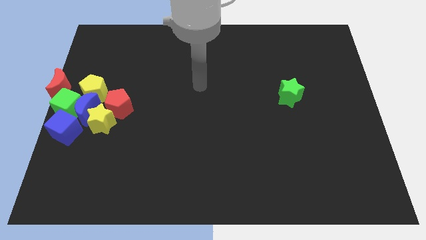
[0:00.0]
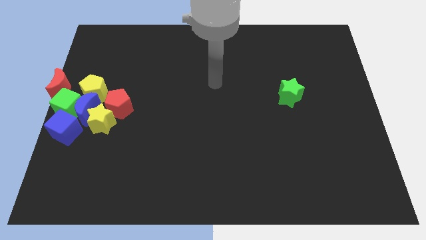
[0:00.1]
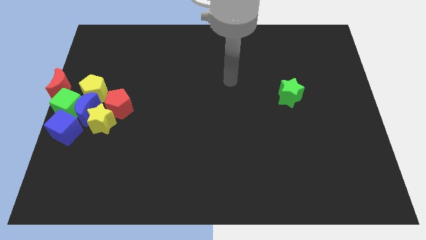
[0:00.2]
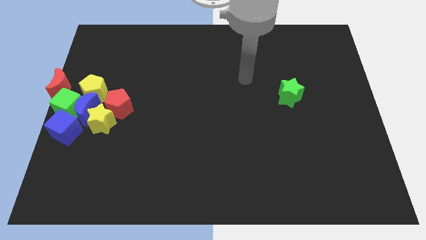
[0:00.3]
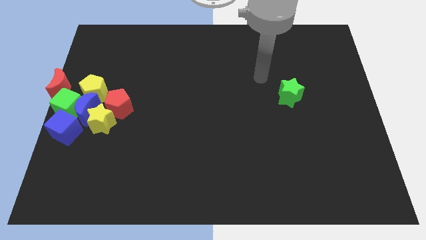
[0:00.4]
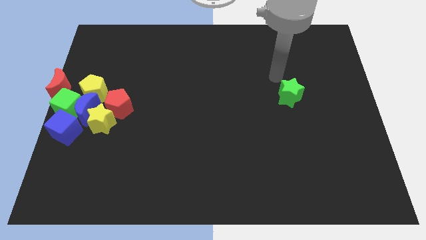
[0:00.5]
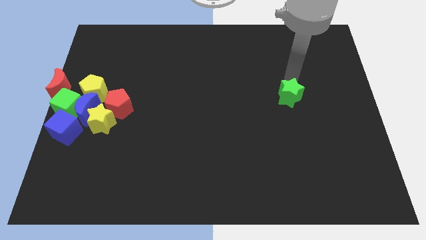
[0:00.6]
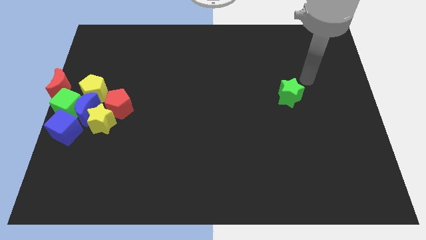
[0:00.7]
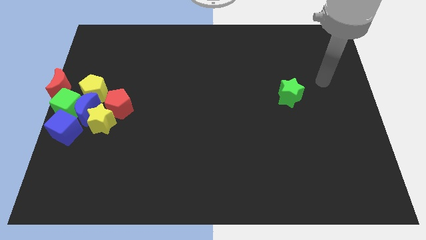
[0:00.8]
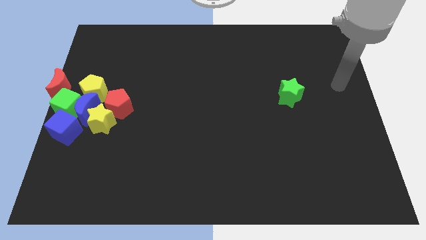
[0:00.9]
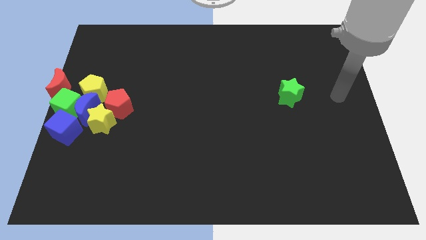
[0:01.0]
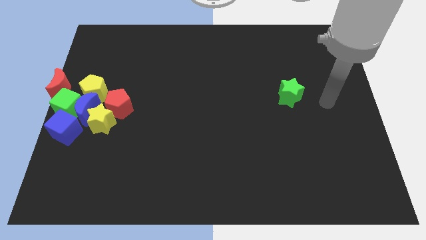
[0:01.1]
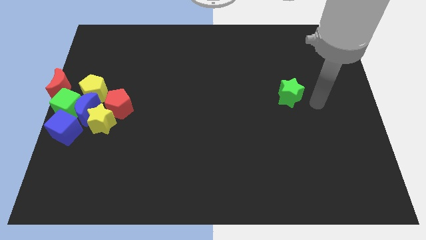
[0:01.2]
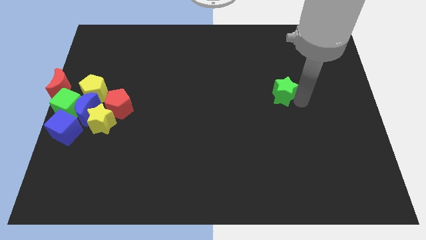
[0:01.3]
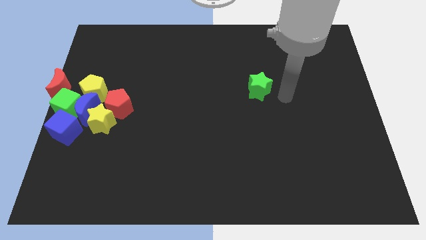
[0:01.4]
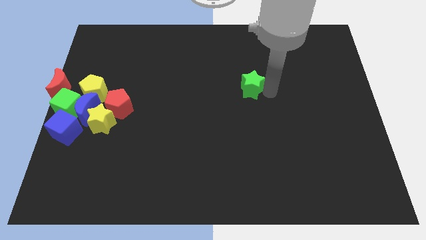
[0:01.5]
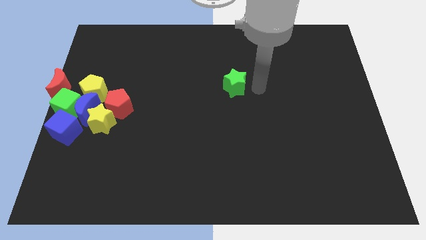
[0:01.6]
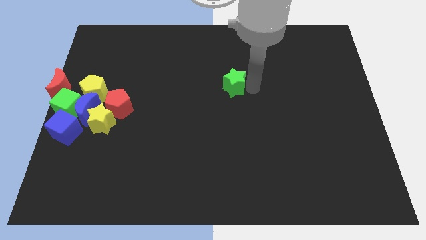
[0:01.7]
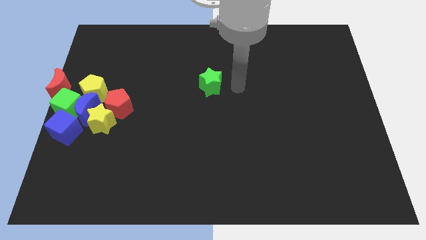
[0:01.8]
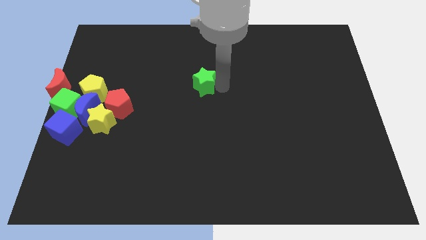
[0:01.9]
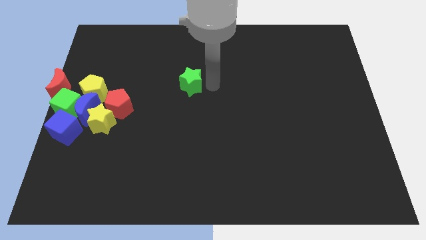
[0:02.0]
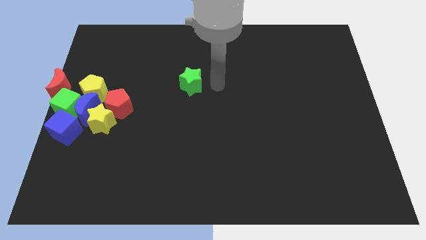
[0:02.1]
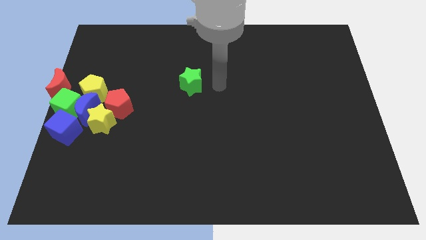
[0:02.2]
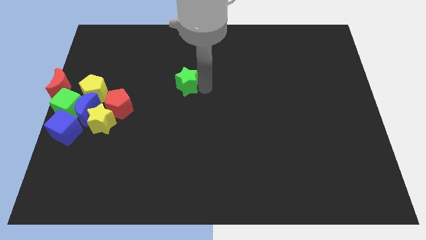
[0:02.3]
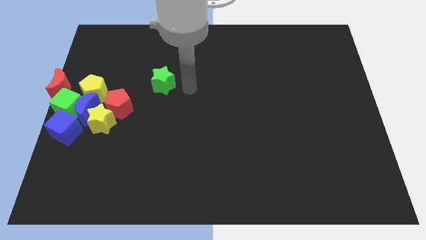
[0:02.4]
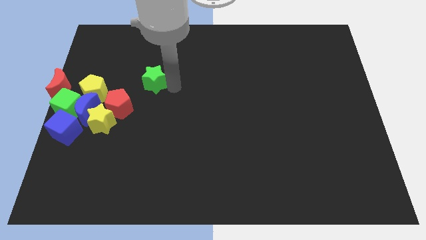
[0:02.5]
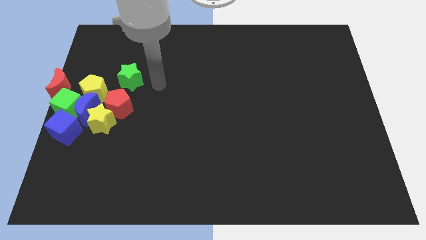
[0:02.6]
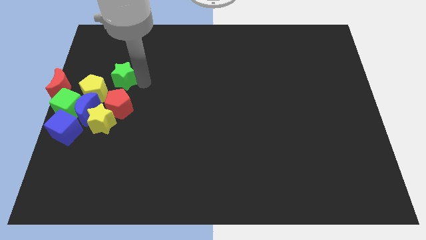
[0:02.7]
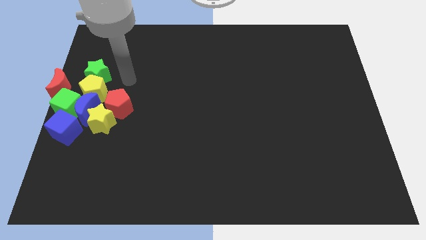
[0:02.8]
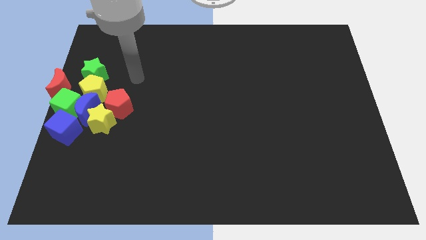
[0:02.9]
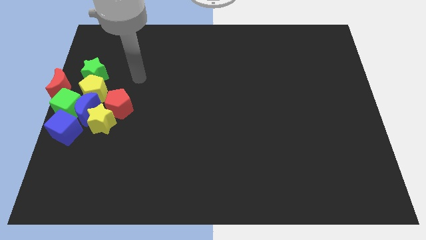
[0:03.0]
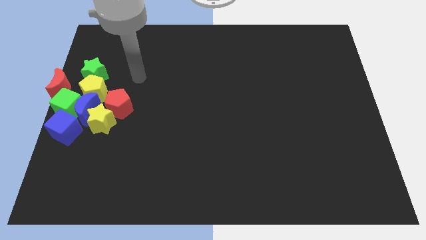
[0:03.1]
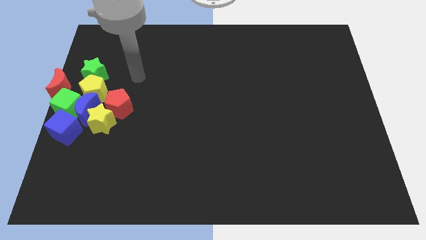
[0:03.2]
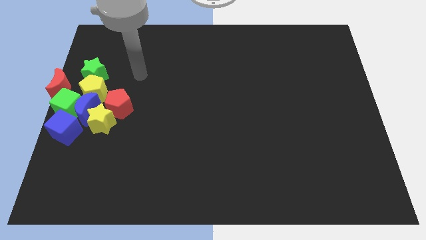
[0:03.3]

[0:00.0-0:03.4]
push green star to the top of the yellow pentagon

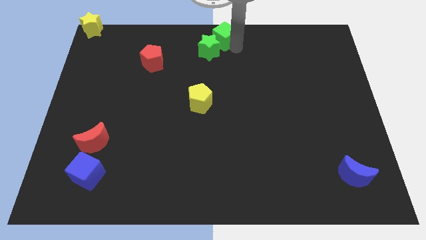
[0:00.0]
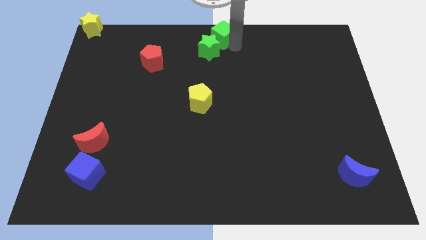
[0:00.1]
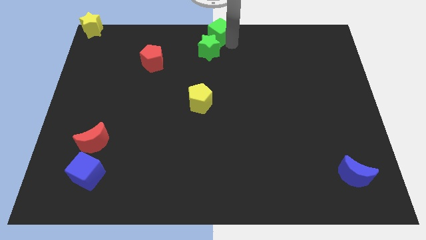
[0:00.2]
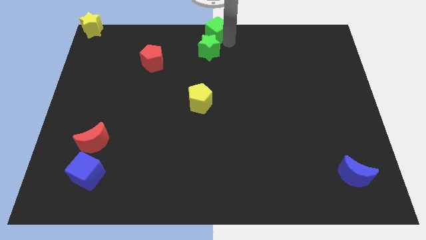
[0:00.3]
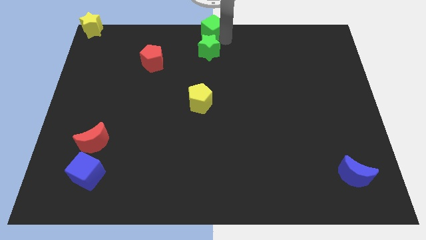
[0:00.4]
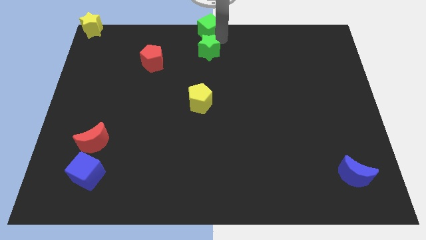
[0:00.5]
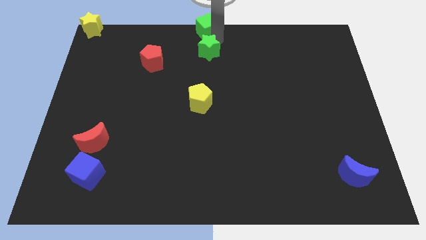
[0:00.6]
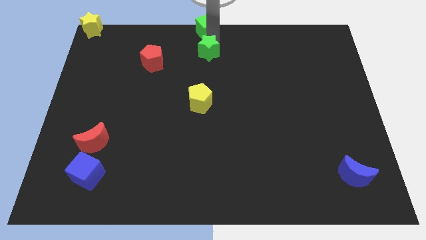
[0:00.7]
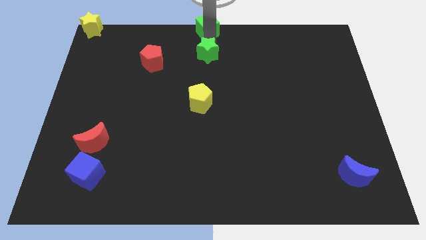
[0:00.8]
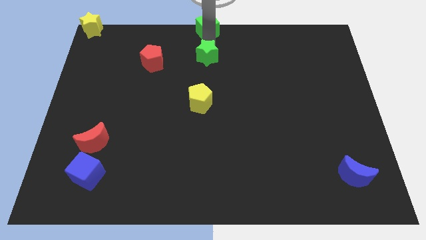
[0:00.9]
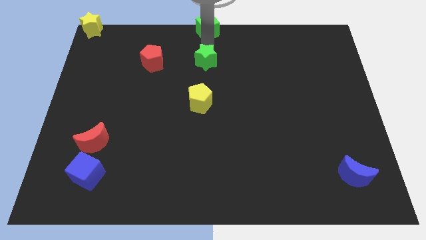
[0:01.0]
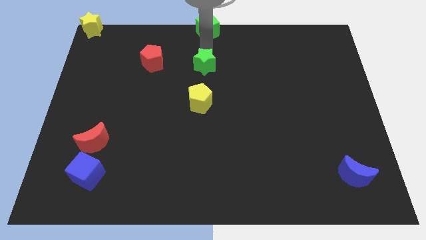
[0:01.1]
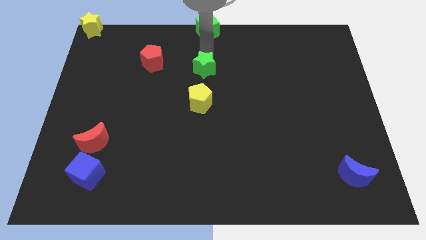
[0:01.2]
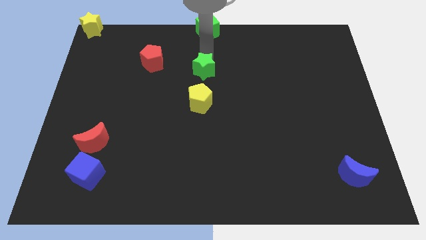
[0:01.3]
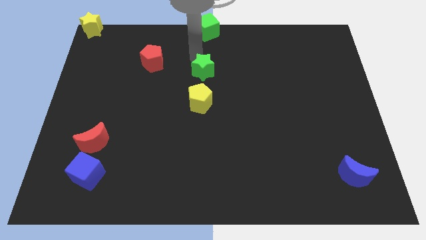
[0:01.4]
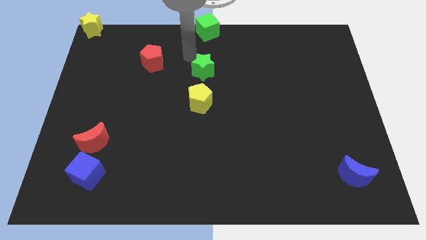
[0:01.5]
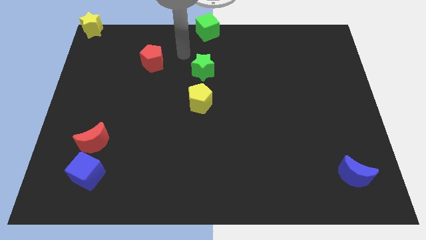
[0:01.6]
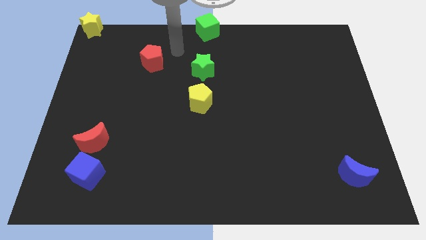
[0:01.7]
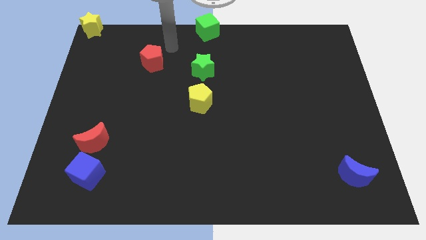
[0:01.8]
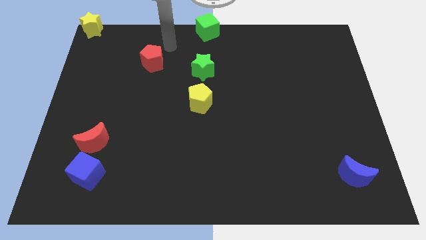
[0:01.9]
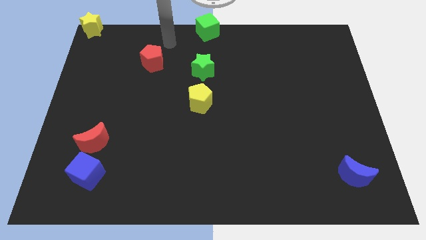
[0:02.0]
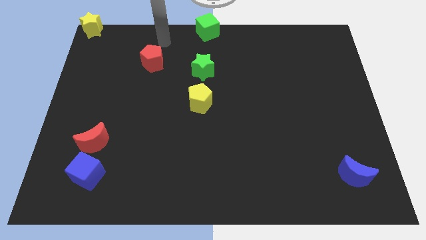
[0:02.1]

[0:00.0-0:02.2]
move green star towards the yellow pentagon

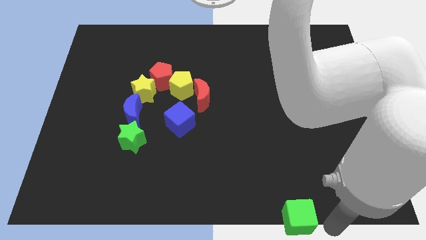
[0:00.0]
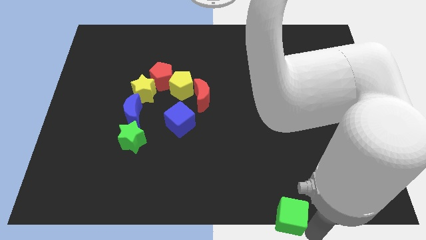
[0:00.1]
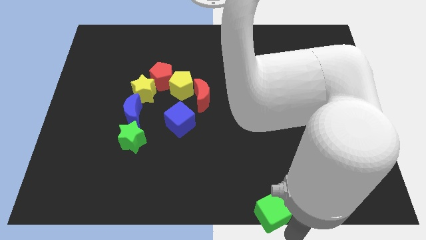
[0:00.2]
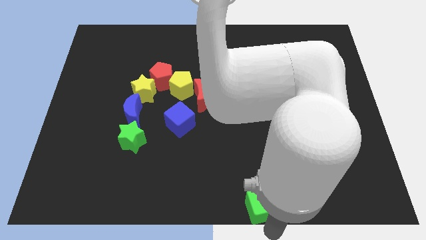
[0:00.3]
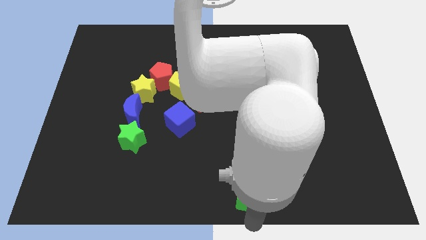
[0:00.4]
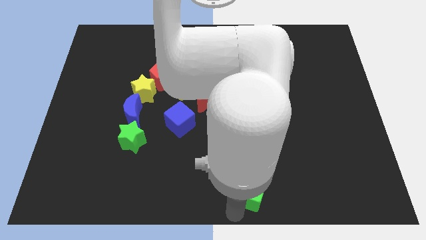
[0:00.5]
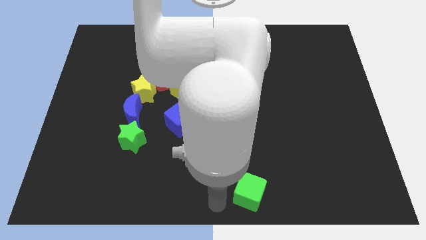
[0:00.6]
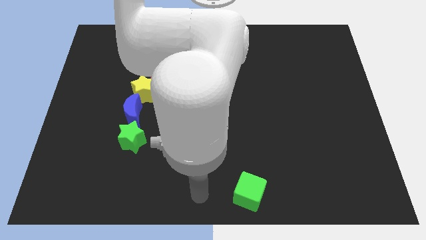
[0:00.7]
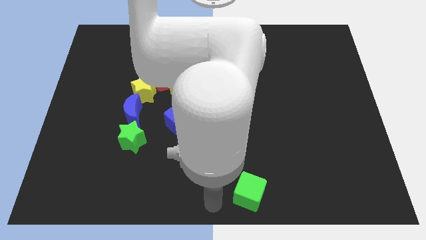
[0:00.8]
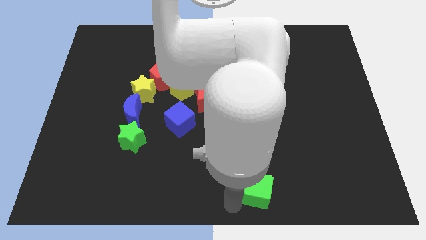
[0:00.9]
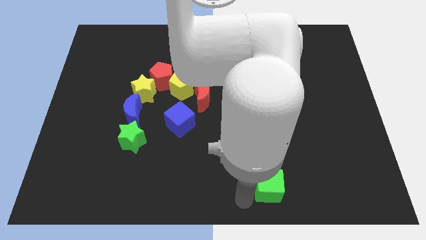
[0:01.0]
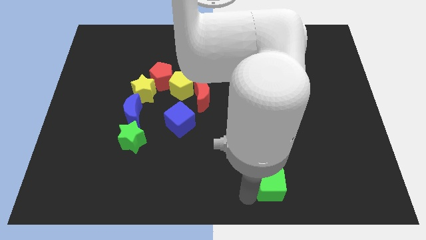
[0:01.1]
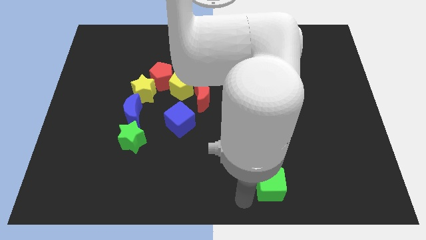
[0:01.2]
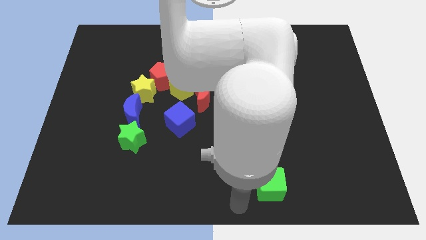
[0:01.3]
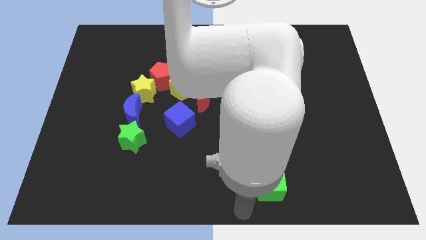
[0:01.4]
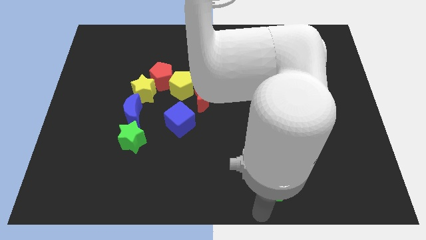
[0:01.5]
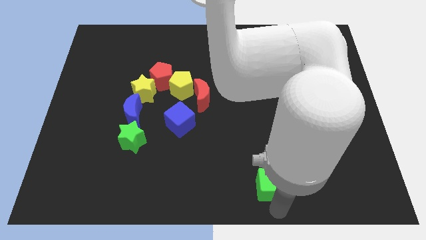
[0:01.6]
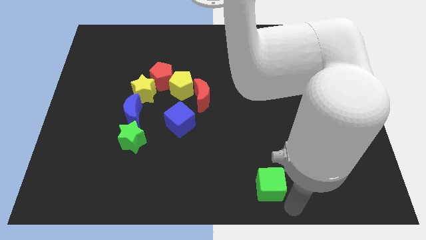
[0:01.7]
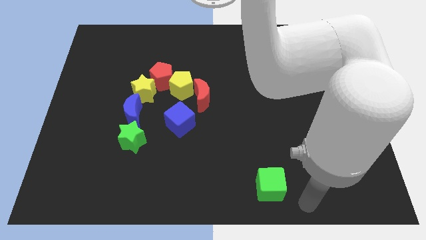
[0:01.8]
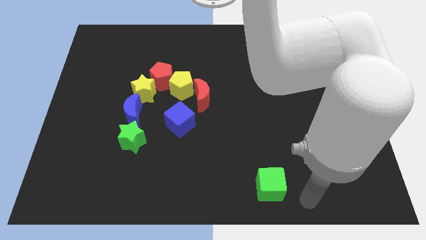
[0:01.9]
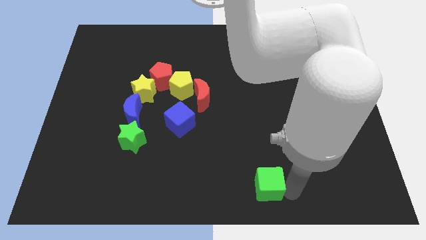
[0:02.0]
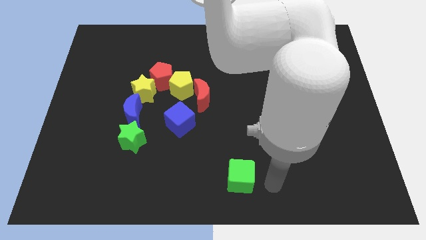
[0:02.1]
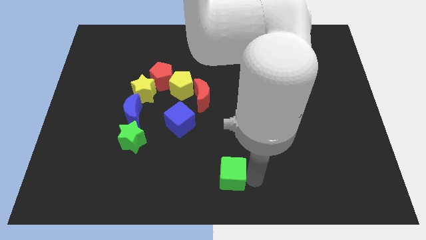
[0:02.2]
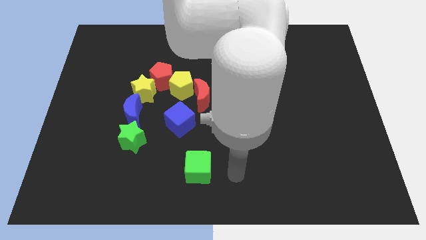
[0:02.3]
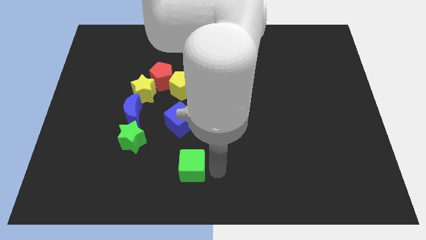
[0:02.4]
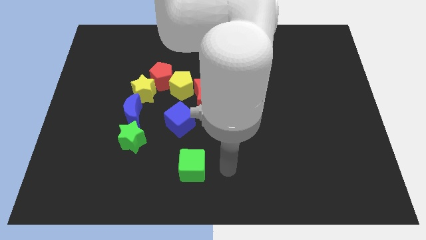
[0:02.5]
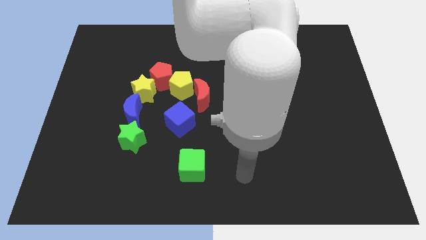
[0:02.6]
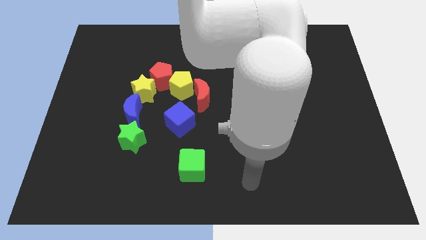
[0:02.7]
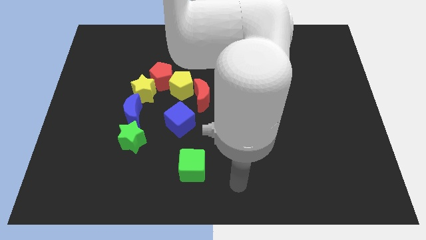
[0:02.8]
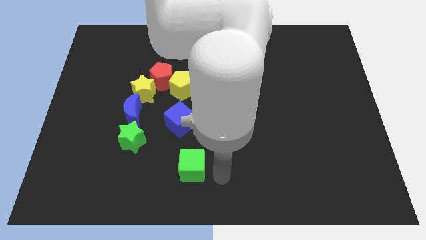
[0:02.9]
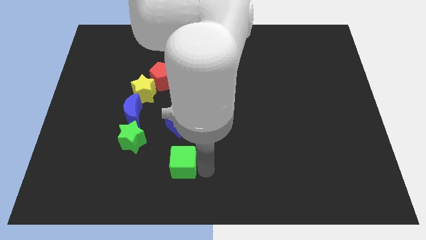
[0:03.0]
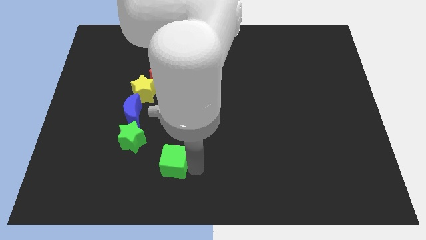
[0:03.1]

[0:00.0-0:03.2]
place the green cube below the blue cube
